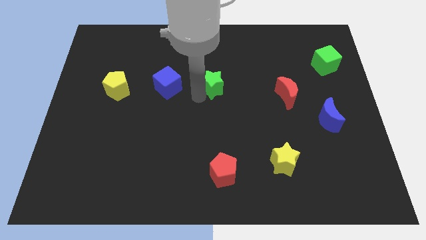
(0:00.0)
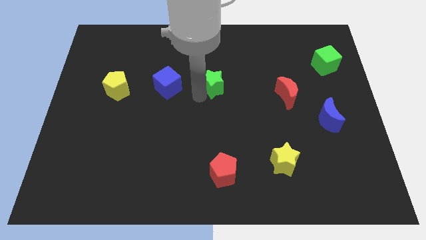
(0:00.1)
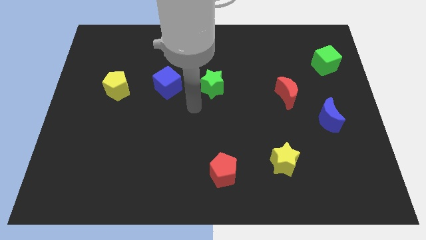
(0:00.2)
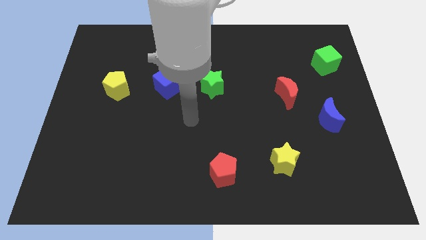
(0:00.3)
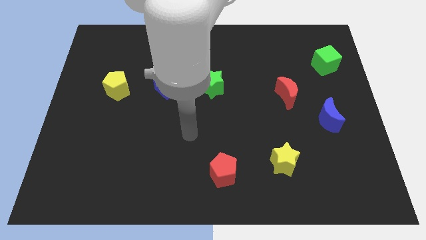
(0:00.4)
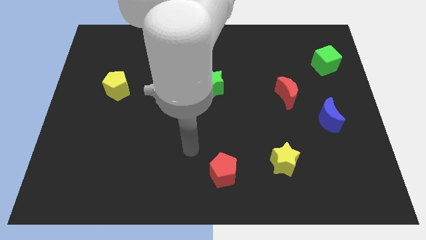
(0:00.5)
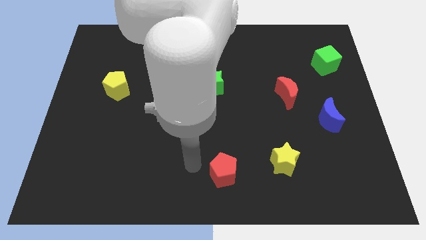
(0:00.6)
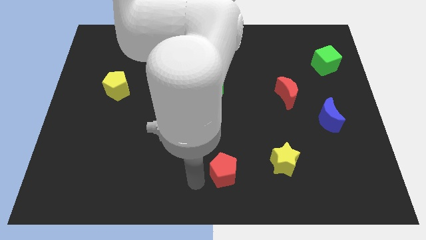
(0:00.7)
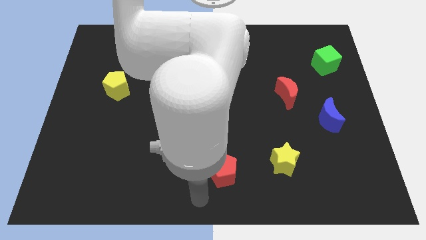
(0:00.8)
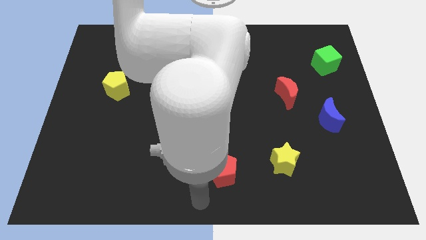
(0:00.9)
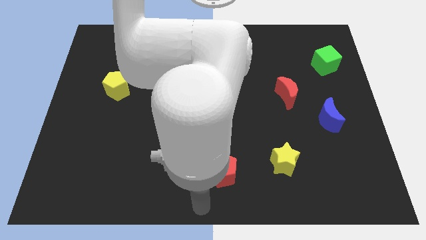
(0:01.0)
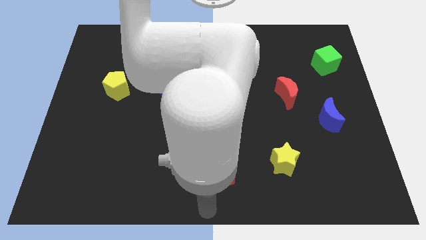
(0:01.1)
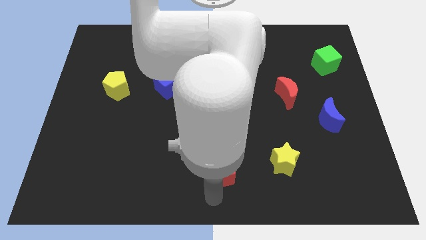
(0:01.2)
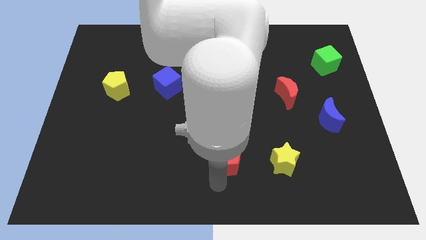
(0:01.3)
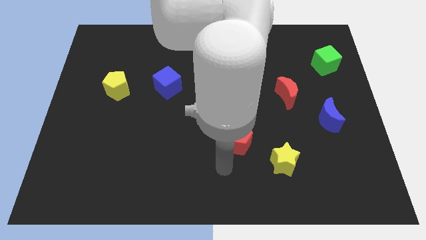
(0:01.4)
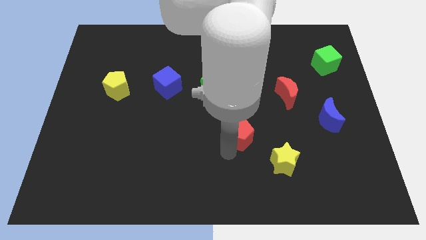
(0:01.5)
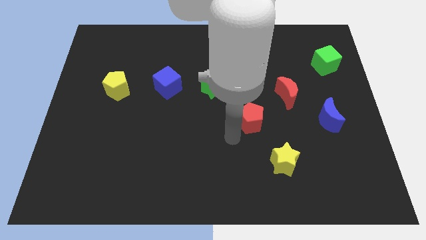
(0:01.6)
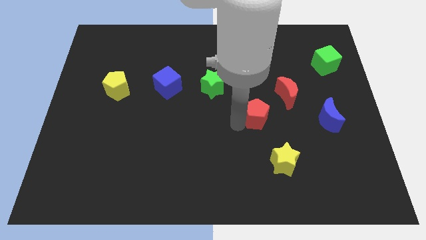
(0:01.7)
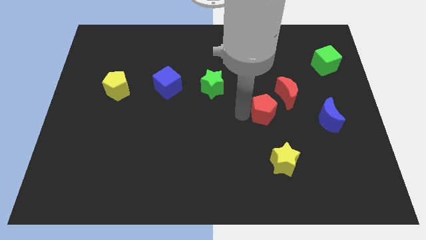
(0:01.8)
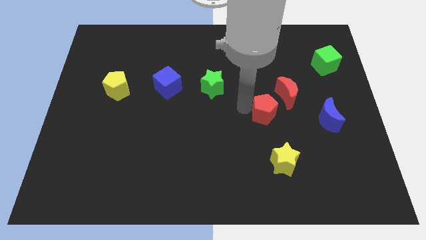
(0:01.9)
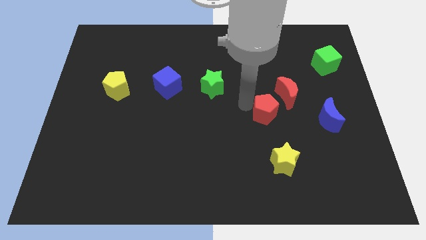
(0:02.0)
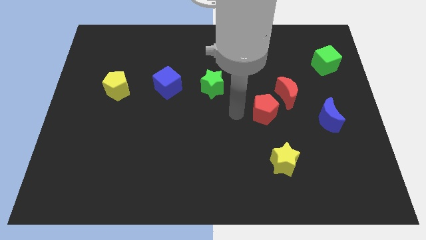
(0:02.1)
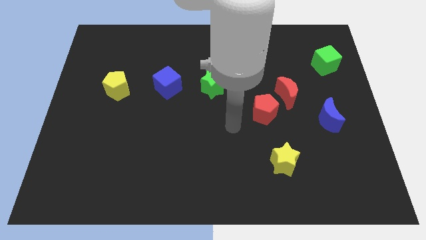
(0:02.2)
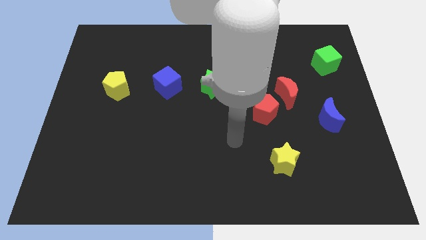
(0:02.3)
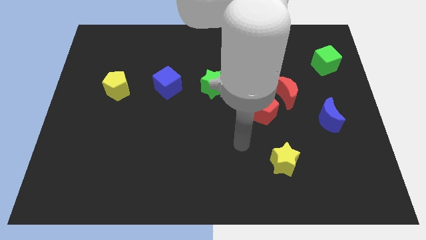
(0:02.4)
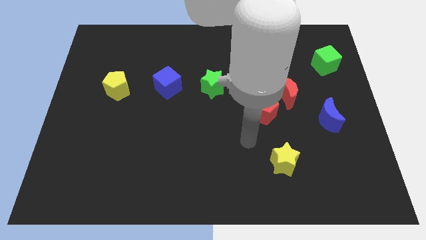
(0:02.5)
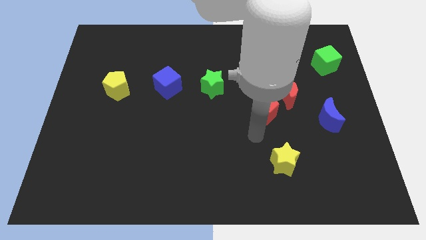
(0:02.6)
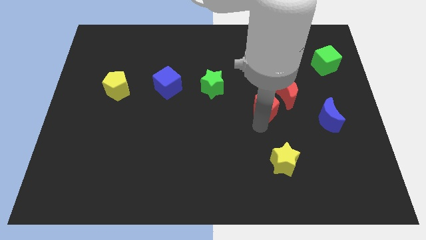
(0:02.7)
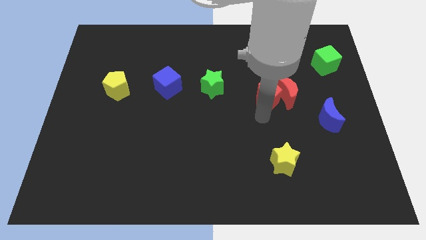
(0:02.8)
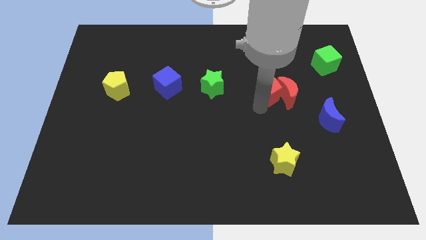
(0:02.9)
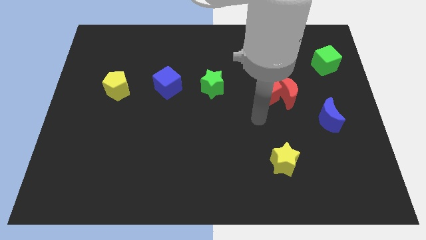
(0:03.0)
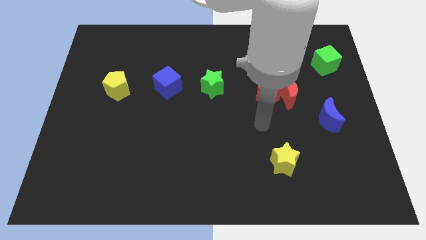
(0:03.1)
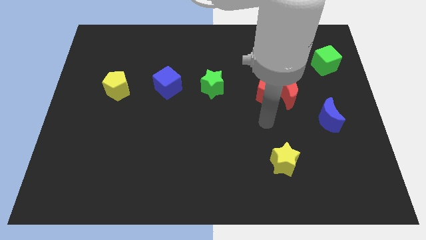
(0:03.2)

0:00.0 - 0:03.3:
push the red pentagon towards the red moon

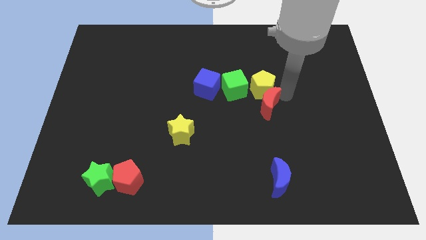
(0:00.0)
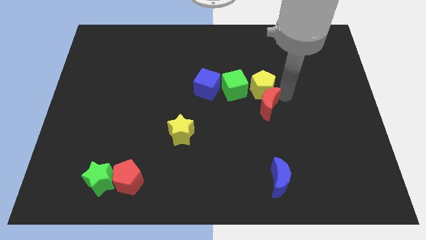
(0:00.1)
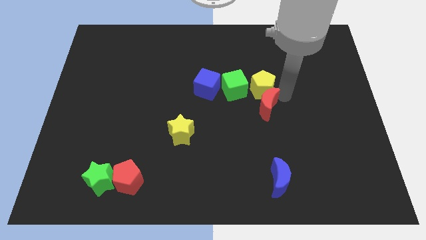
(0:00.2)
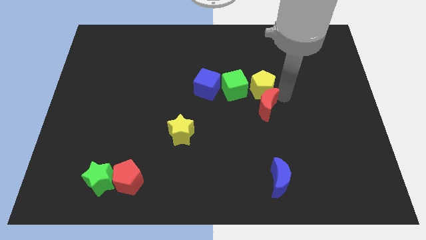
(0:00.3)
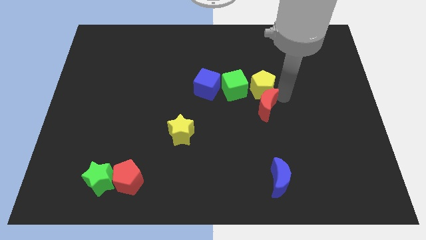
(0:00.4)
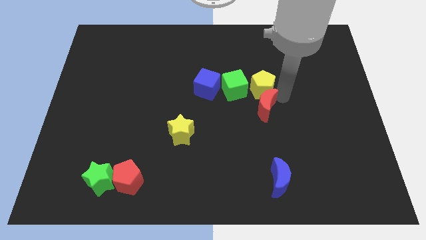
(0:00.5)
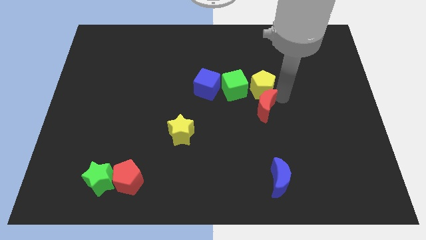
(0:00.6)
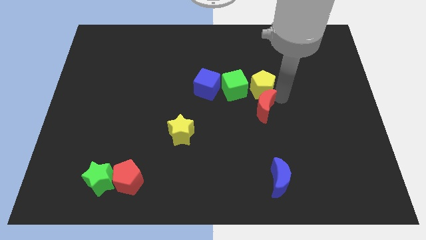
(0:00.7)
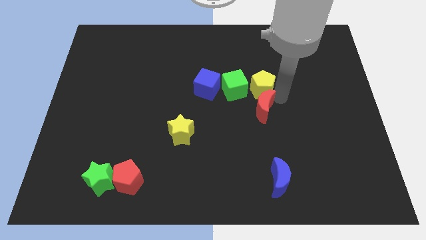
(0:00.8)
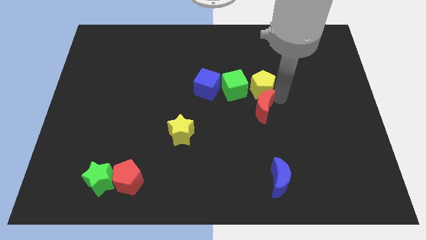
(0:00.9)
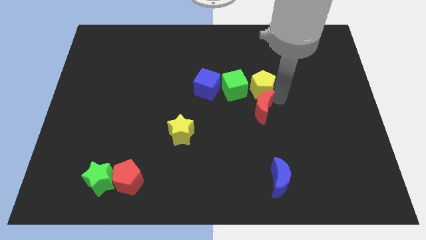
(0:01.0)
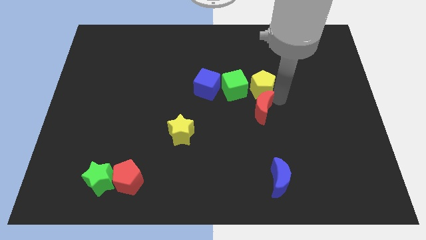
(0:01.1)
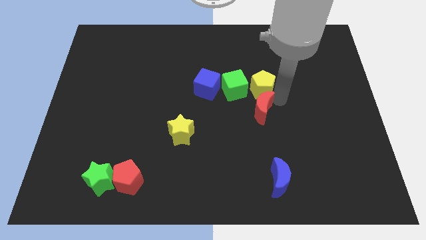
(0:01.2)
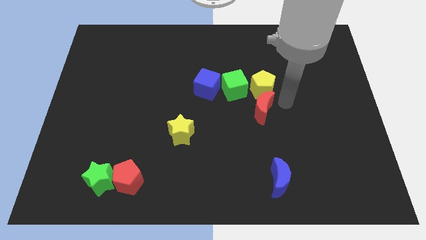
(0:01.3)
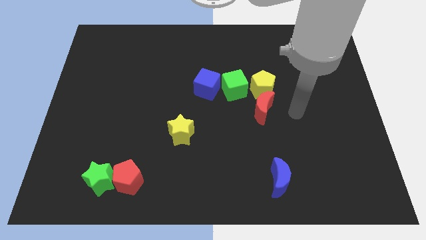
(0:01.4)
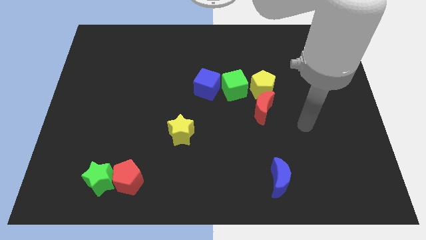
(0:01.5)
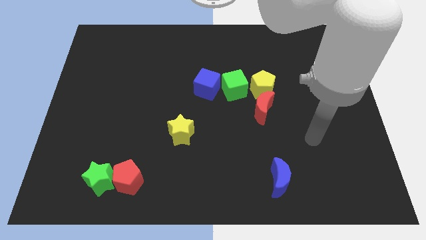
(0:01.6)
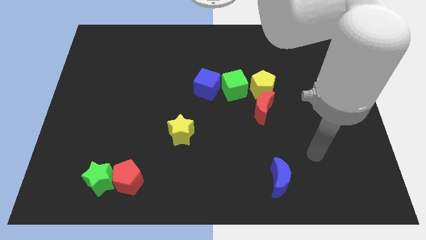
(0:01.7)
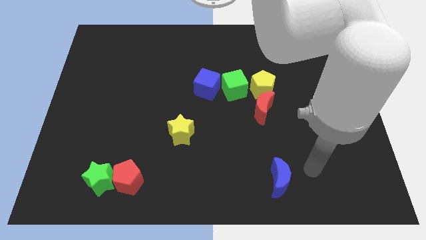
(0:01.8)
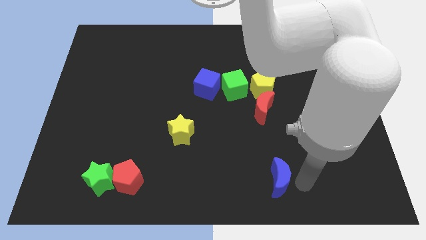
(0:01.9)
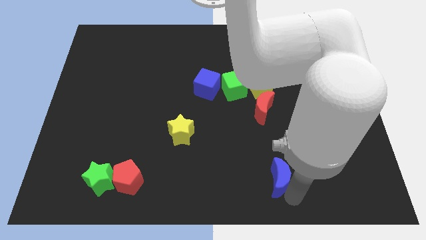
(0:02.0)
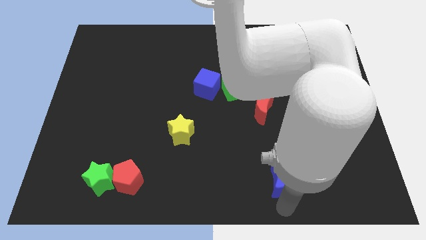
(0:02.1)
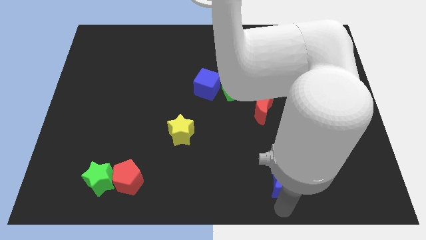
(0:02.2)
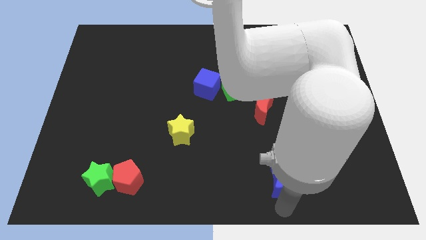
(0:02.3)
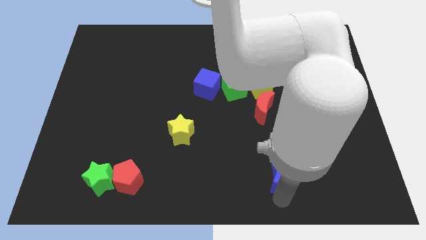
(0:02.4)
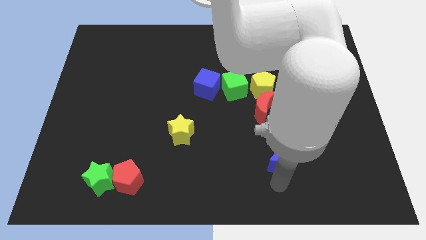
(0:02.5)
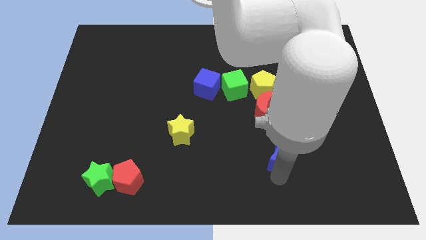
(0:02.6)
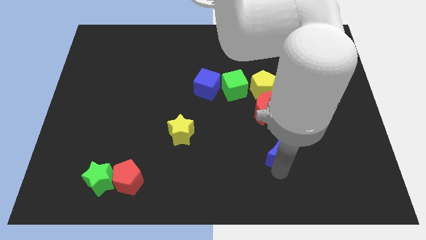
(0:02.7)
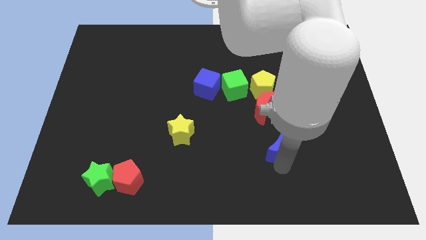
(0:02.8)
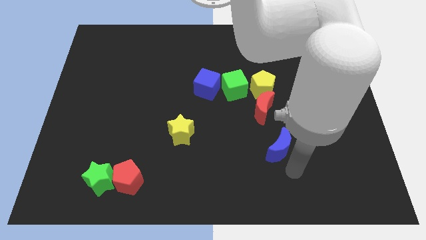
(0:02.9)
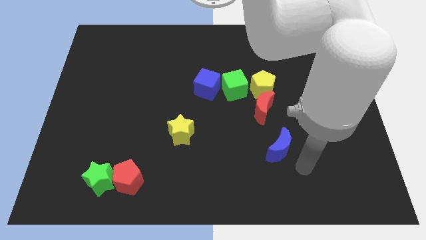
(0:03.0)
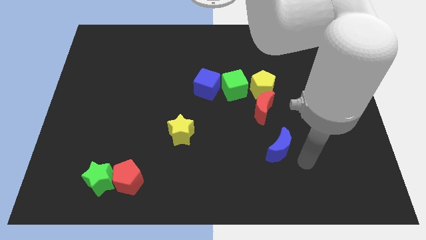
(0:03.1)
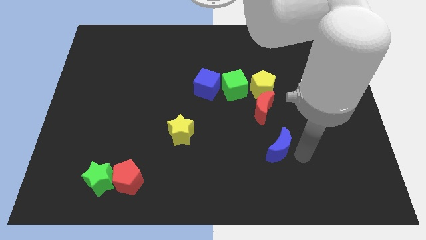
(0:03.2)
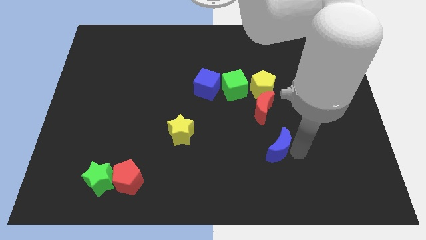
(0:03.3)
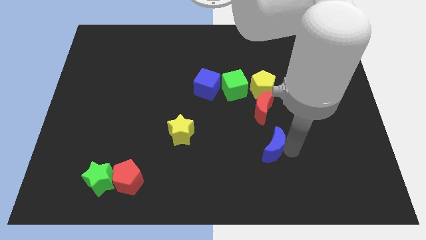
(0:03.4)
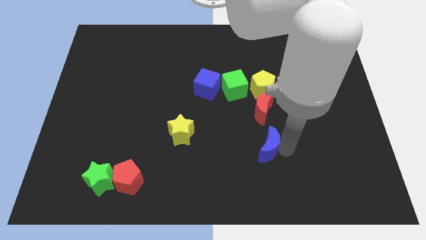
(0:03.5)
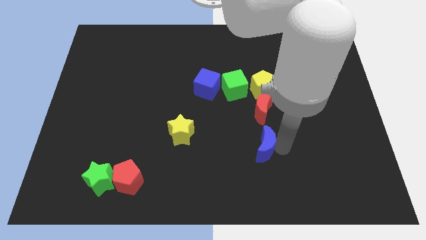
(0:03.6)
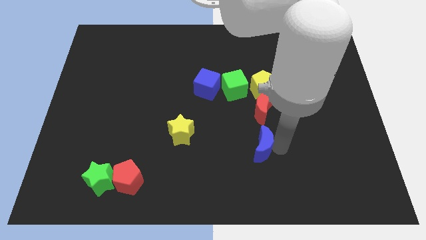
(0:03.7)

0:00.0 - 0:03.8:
place the blue moon below the red moon

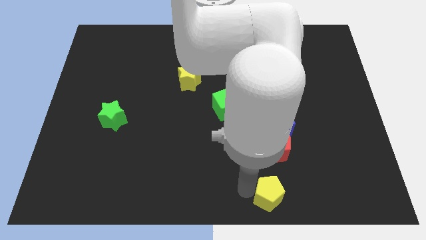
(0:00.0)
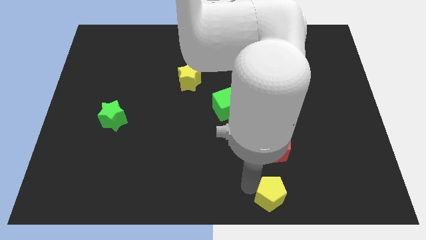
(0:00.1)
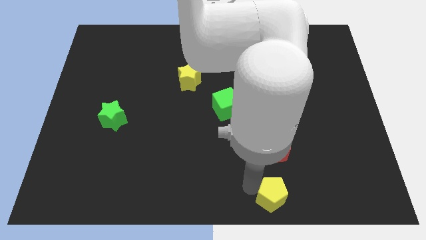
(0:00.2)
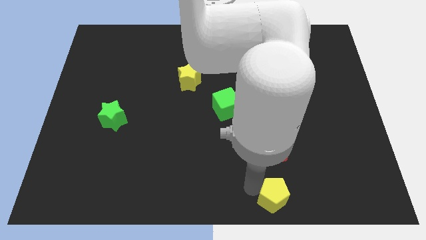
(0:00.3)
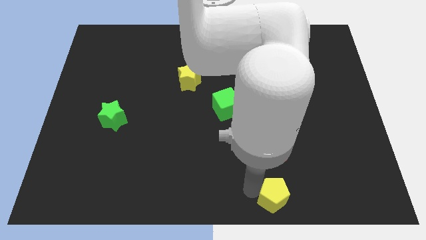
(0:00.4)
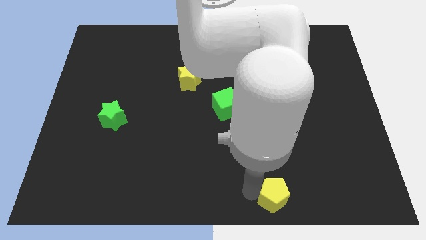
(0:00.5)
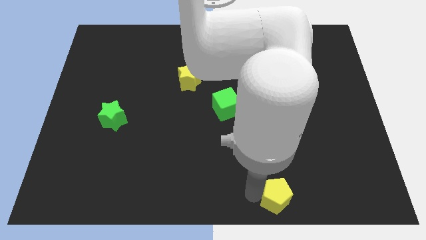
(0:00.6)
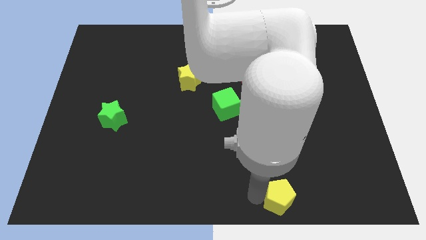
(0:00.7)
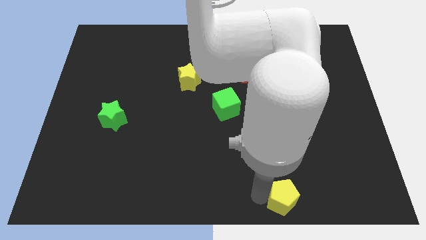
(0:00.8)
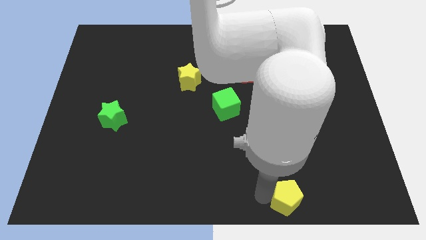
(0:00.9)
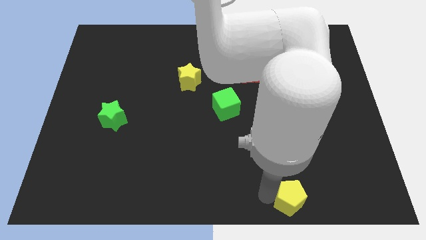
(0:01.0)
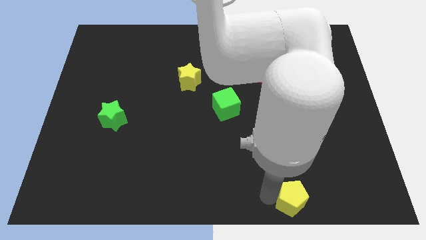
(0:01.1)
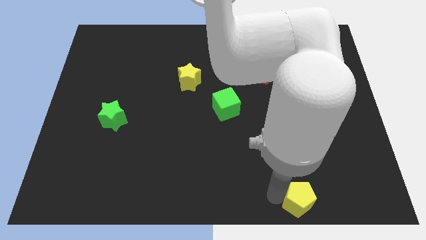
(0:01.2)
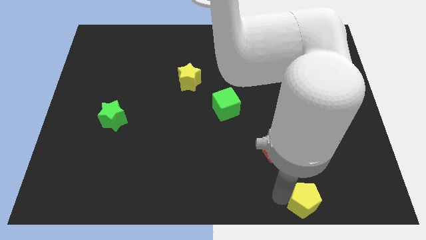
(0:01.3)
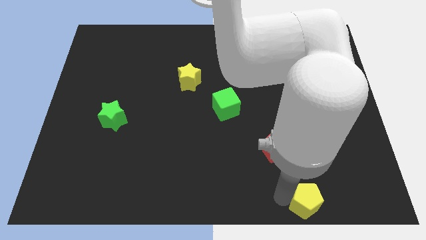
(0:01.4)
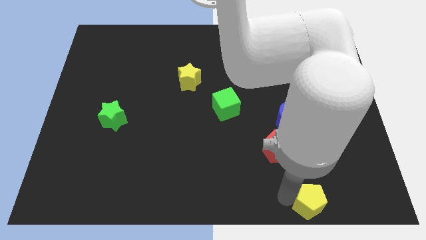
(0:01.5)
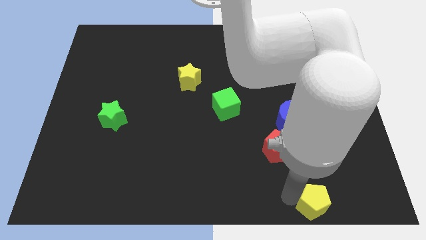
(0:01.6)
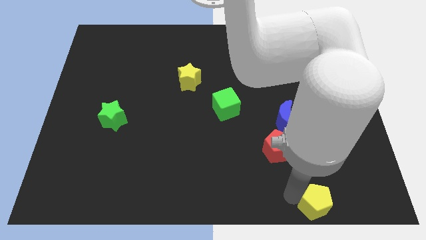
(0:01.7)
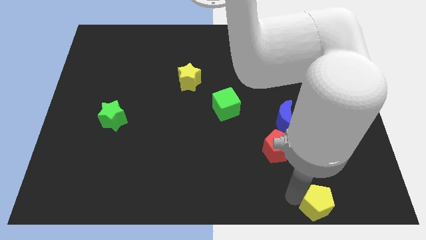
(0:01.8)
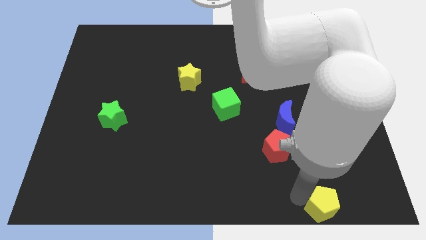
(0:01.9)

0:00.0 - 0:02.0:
push the yellow pentagon towards the bottom right
